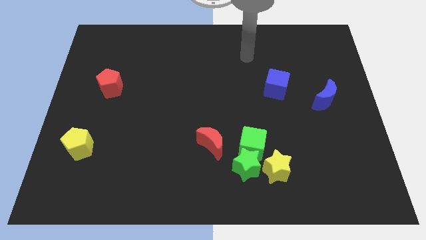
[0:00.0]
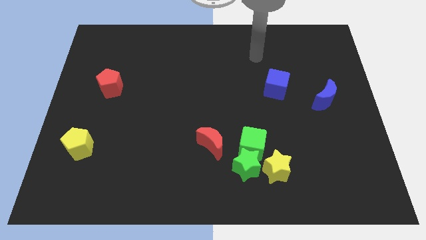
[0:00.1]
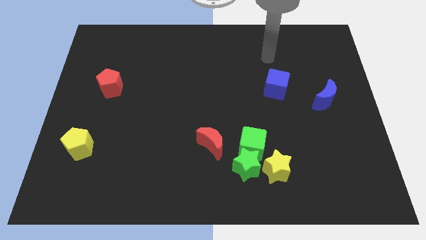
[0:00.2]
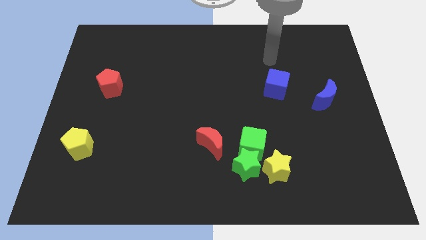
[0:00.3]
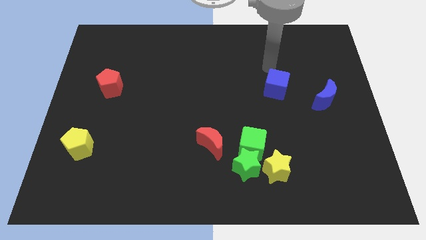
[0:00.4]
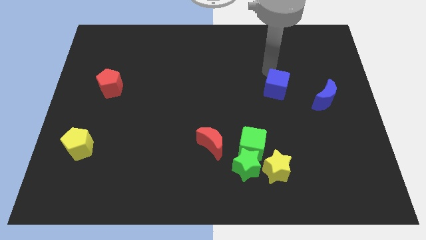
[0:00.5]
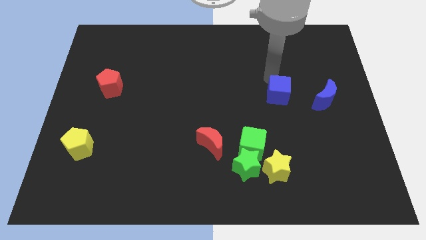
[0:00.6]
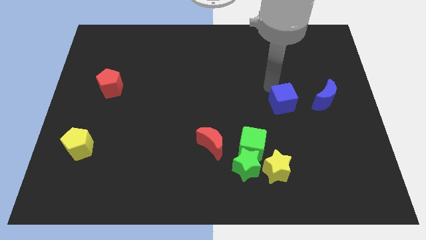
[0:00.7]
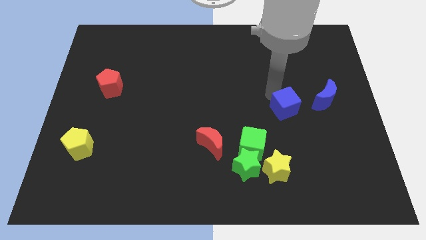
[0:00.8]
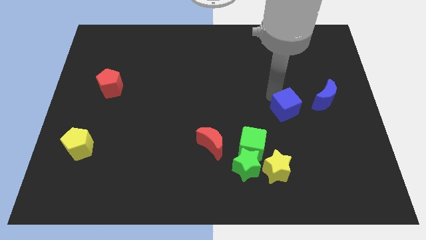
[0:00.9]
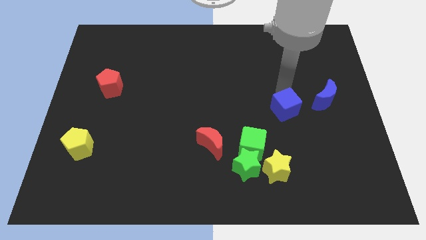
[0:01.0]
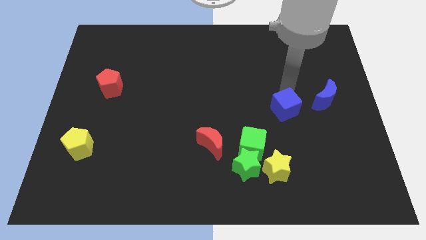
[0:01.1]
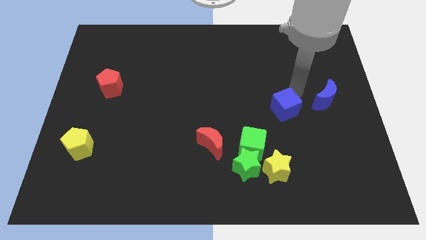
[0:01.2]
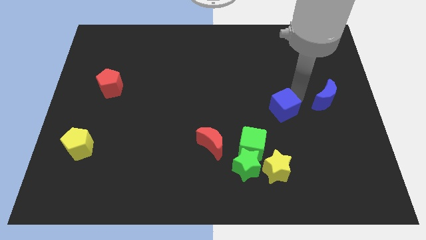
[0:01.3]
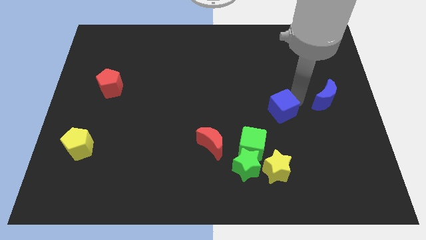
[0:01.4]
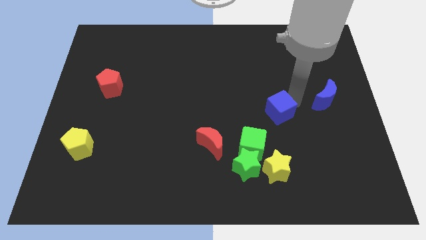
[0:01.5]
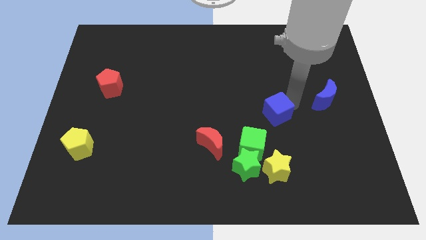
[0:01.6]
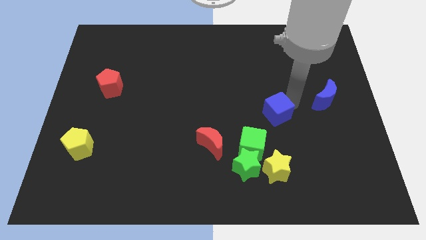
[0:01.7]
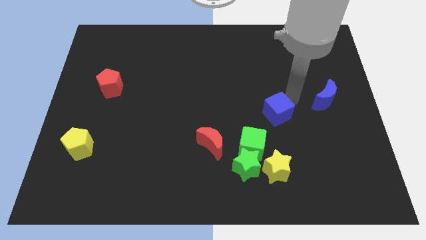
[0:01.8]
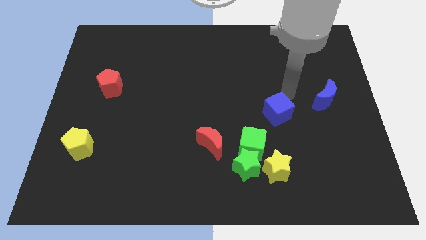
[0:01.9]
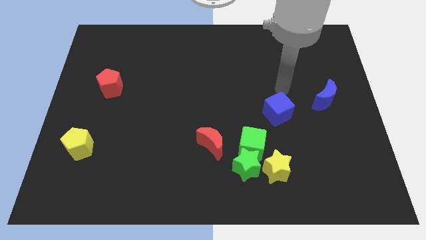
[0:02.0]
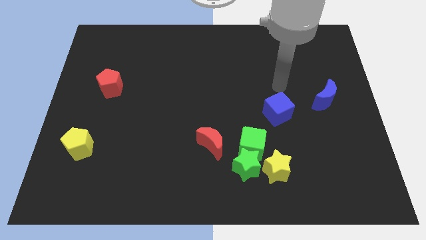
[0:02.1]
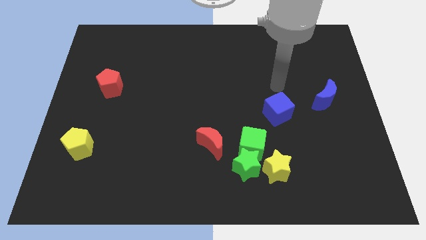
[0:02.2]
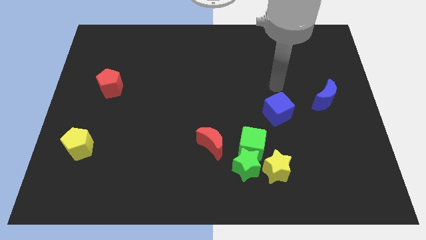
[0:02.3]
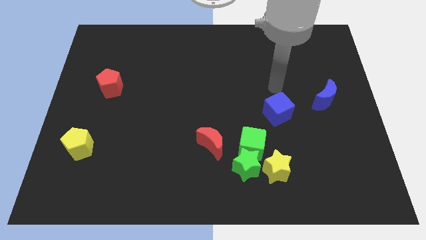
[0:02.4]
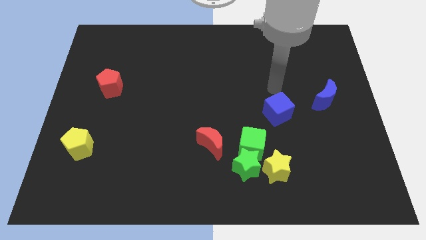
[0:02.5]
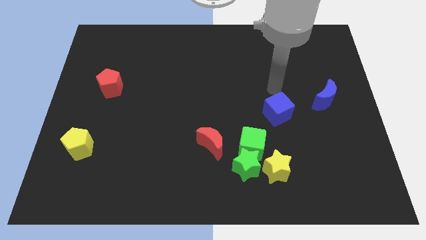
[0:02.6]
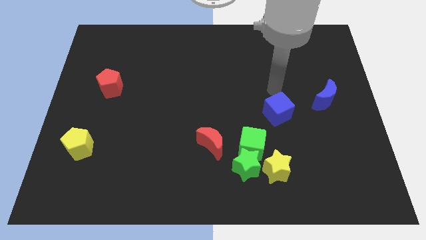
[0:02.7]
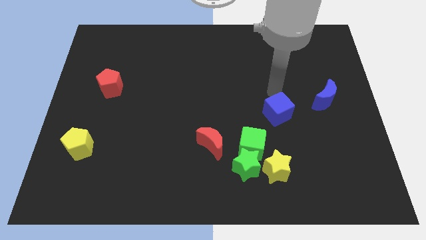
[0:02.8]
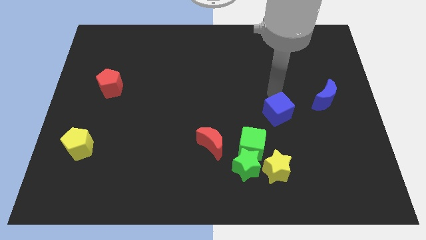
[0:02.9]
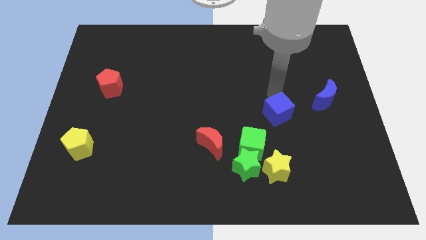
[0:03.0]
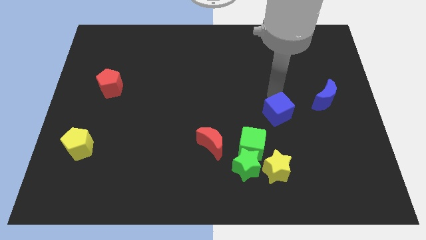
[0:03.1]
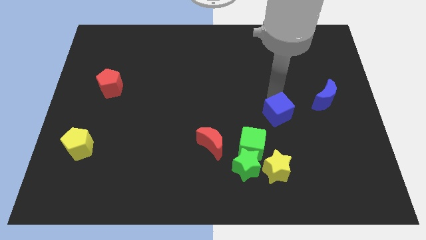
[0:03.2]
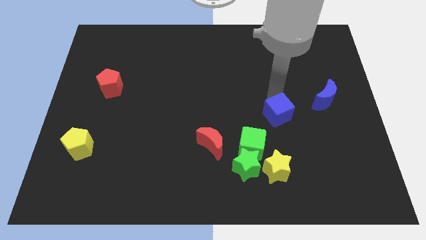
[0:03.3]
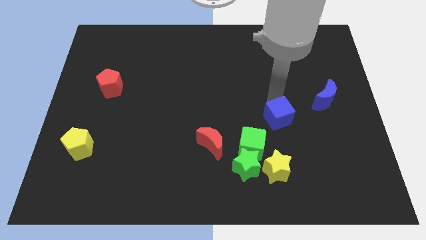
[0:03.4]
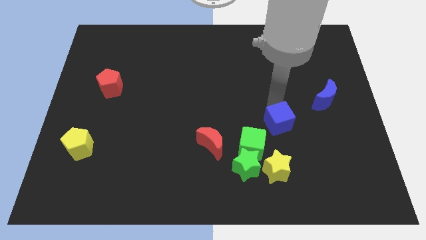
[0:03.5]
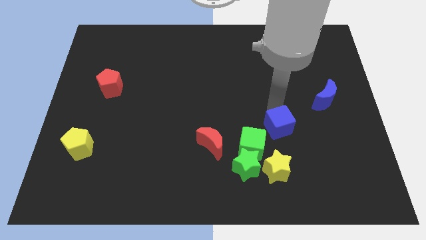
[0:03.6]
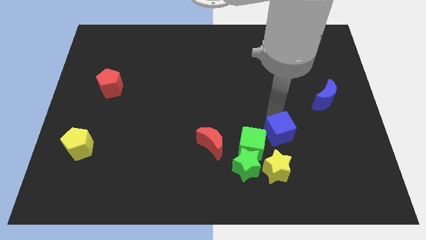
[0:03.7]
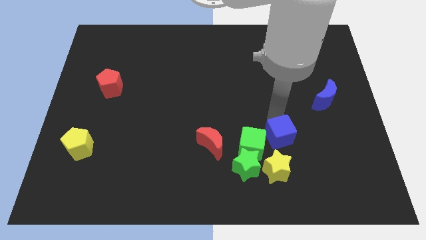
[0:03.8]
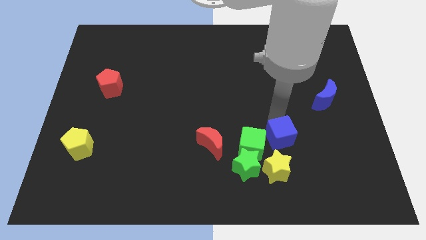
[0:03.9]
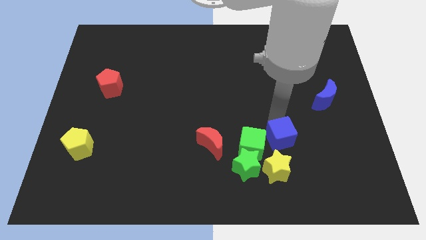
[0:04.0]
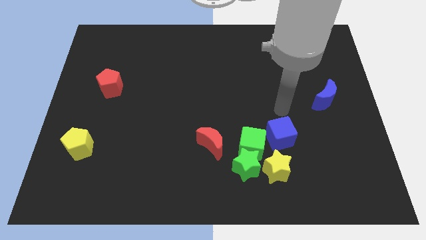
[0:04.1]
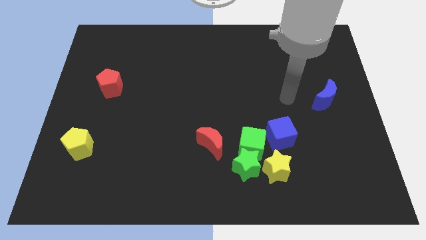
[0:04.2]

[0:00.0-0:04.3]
push blue cube towards yellow star

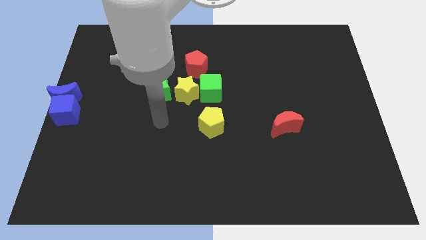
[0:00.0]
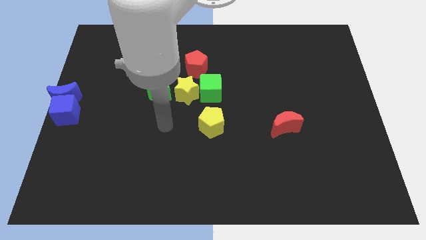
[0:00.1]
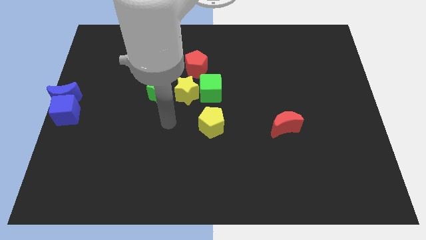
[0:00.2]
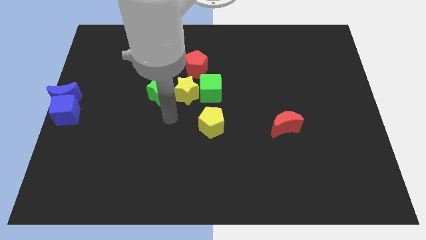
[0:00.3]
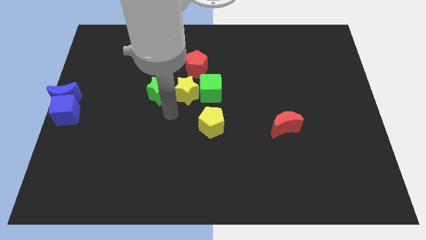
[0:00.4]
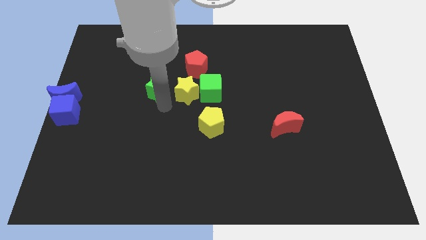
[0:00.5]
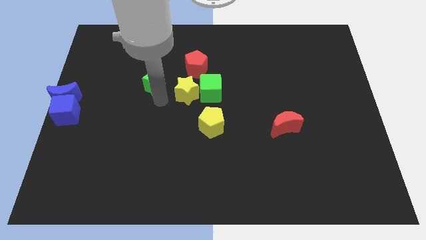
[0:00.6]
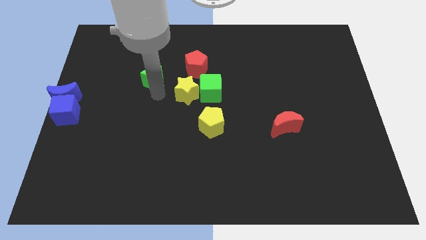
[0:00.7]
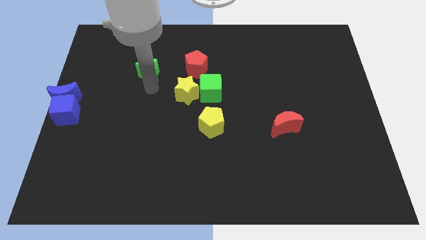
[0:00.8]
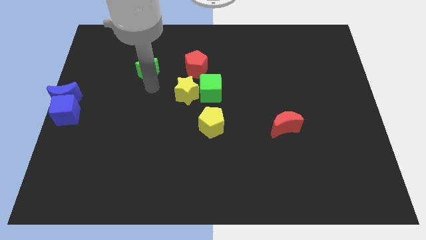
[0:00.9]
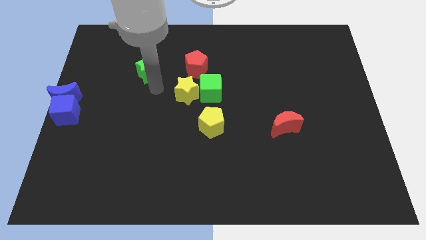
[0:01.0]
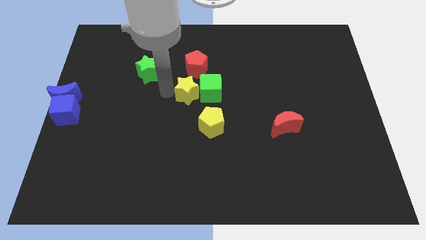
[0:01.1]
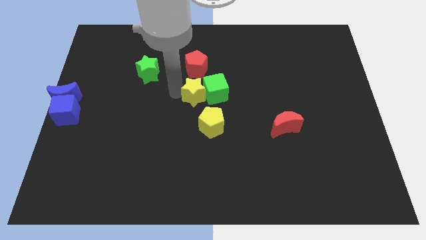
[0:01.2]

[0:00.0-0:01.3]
slide the green star to the left side of the red pentagon

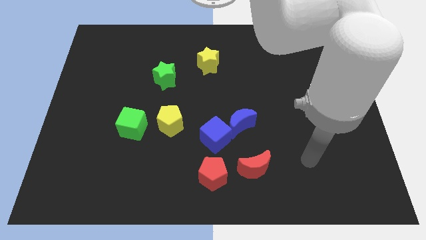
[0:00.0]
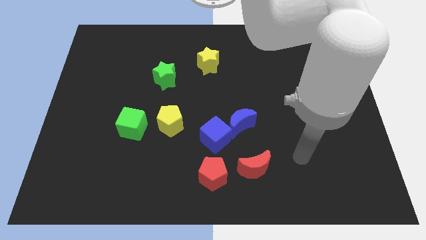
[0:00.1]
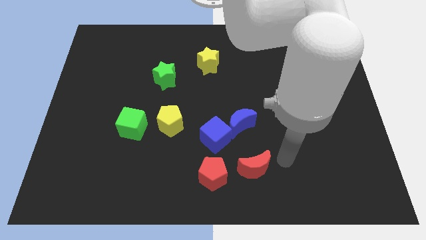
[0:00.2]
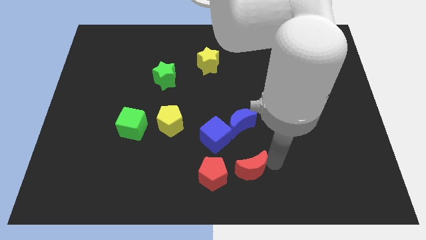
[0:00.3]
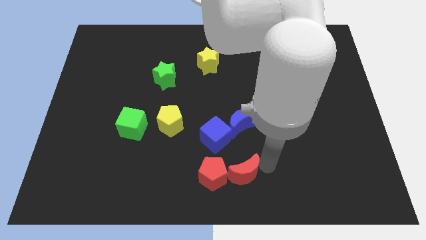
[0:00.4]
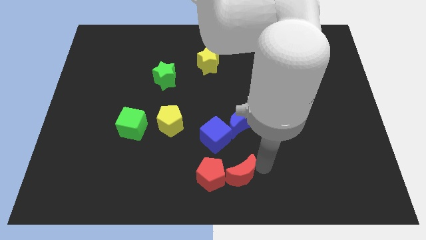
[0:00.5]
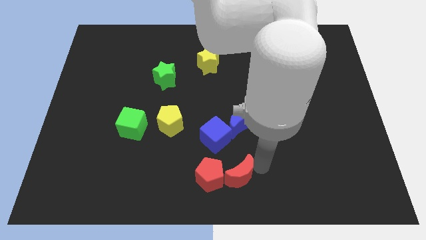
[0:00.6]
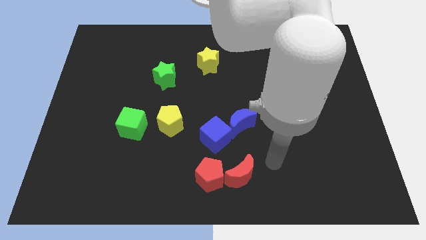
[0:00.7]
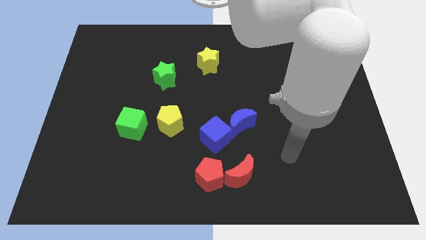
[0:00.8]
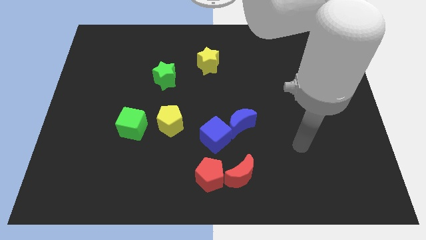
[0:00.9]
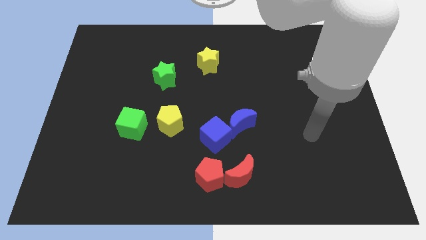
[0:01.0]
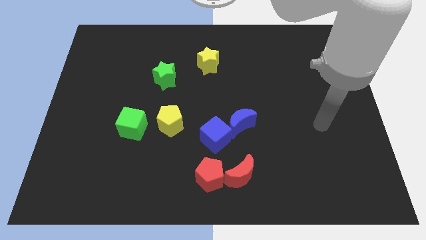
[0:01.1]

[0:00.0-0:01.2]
put the red blocks together

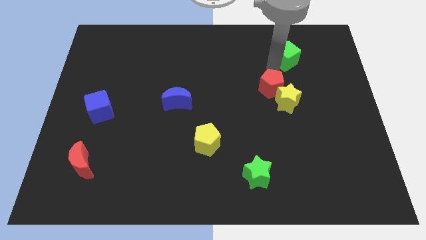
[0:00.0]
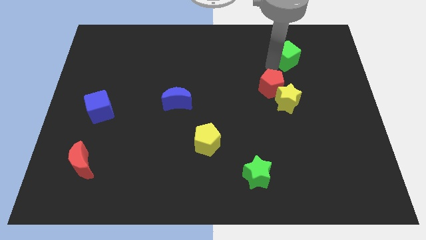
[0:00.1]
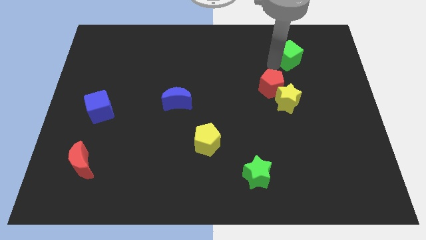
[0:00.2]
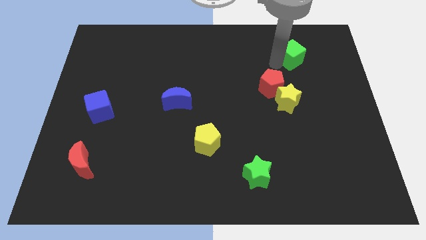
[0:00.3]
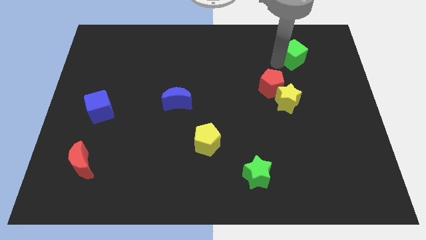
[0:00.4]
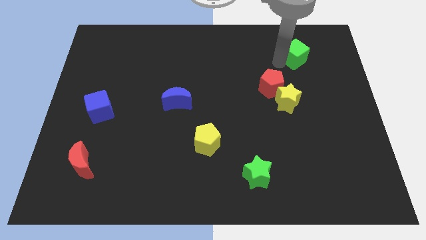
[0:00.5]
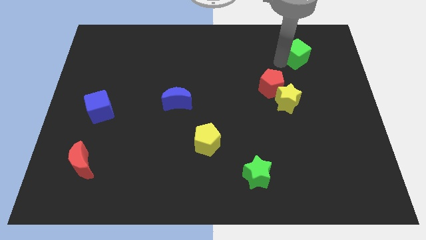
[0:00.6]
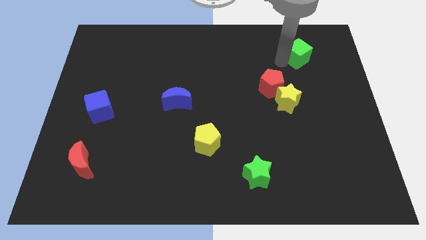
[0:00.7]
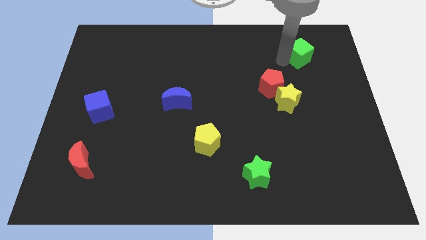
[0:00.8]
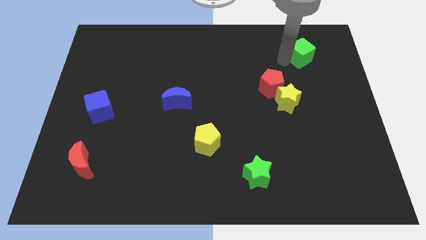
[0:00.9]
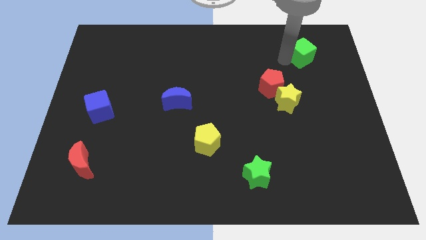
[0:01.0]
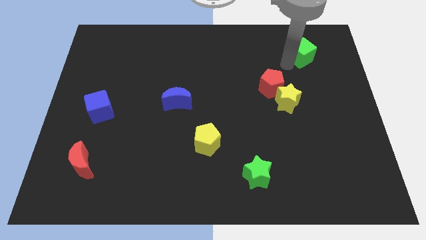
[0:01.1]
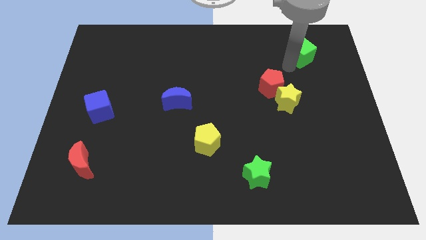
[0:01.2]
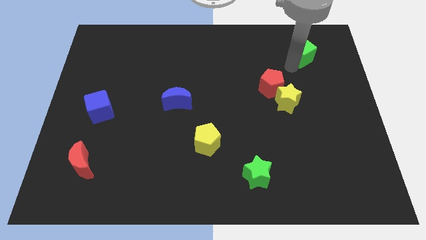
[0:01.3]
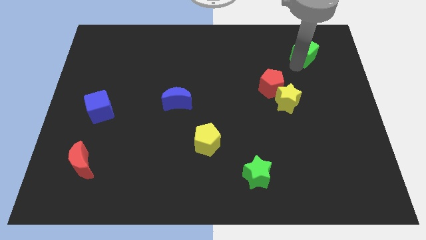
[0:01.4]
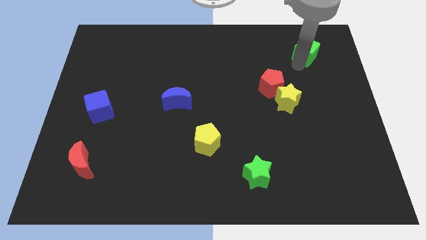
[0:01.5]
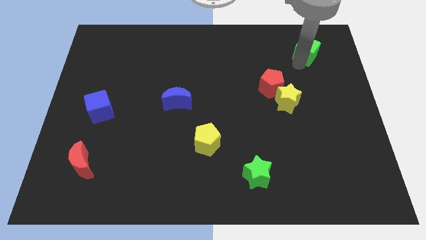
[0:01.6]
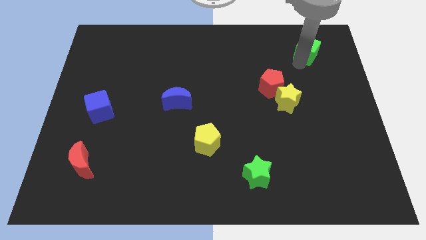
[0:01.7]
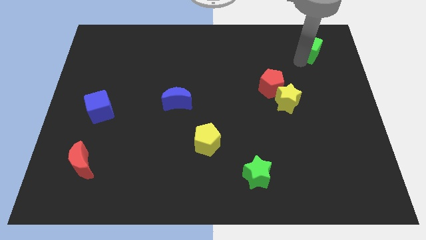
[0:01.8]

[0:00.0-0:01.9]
move the green cube towards the top right of the board

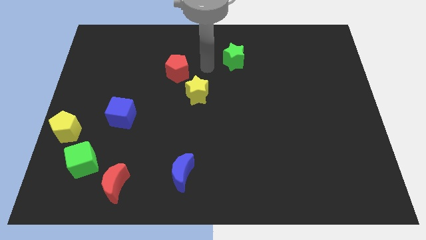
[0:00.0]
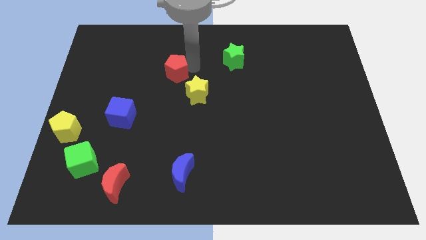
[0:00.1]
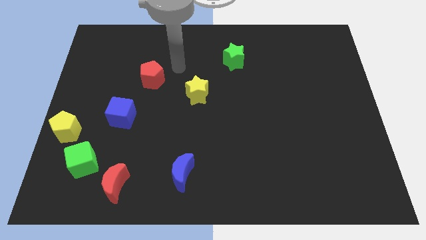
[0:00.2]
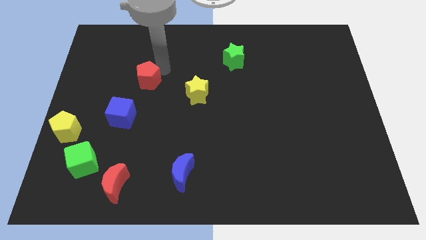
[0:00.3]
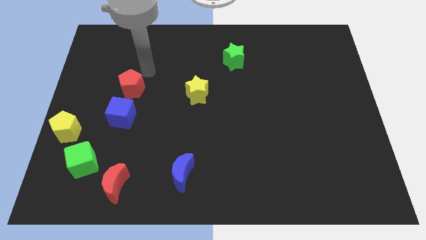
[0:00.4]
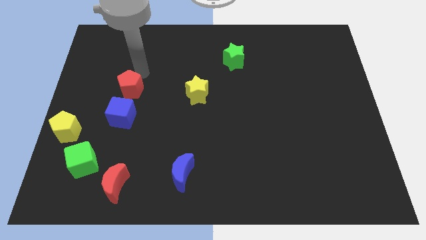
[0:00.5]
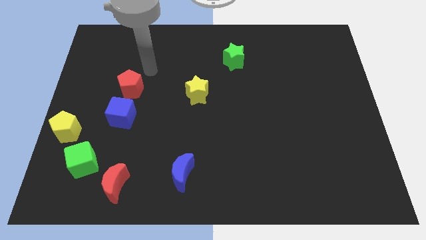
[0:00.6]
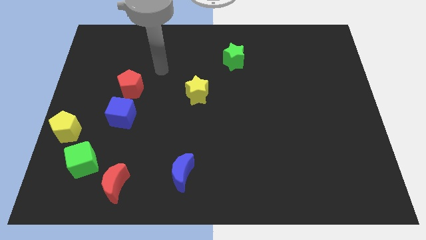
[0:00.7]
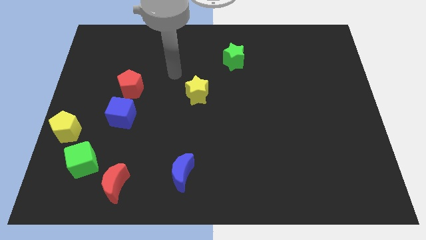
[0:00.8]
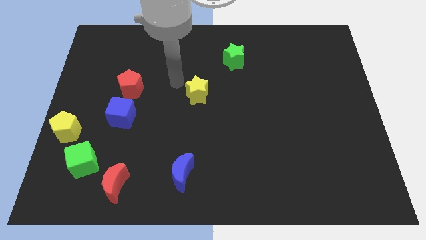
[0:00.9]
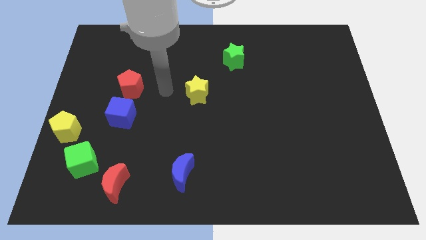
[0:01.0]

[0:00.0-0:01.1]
move the red pentagon to the top of the blue cube
